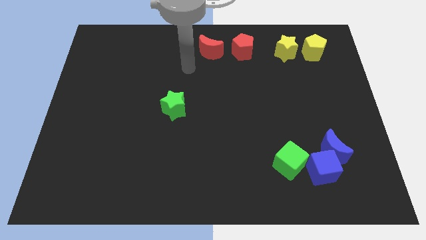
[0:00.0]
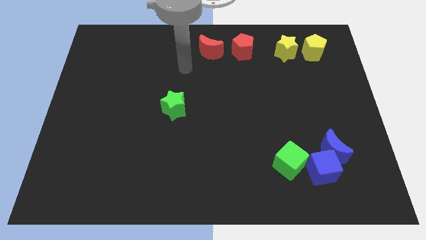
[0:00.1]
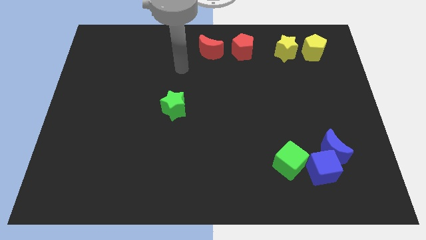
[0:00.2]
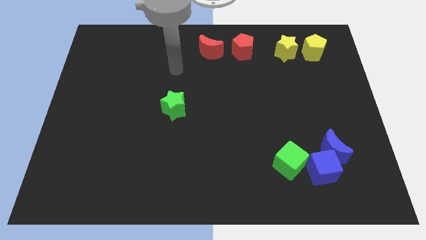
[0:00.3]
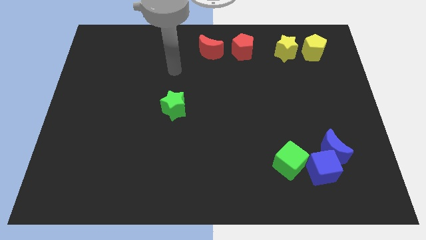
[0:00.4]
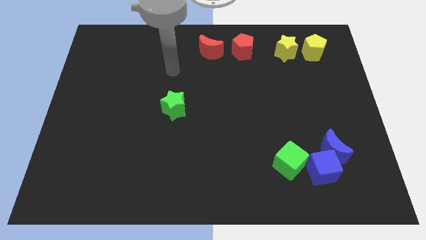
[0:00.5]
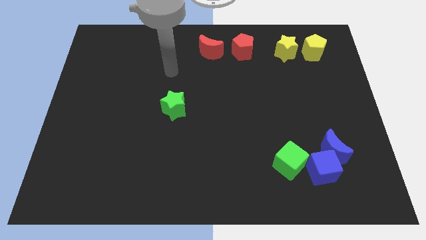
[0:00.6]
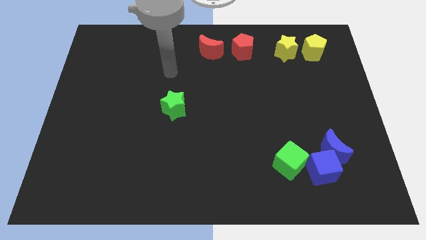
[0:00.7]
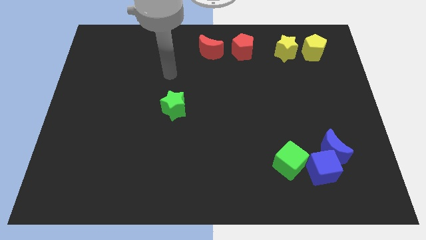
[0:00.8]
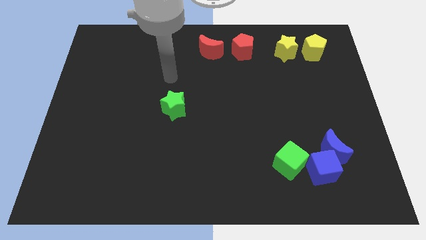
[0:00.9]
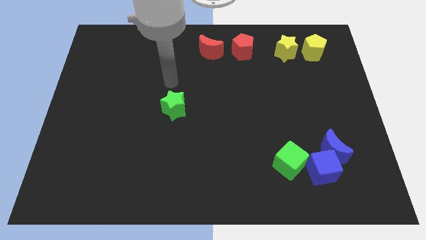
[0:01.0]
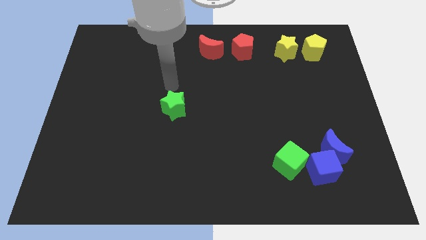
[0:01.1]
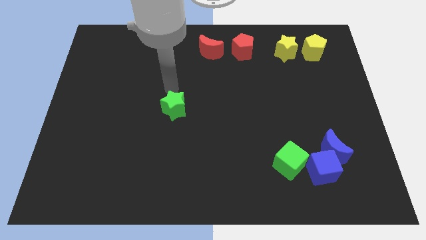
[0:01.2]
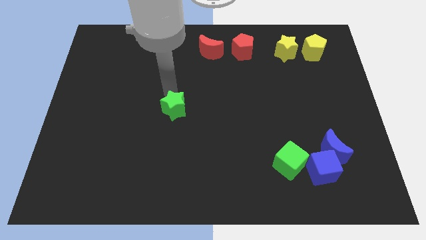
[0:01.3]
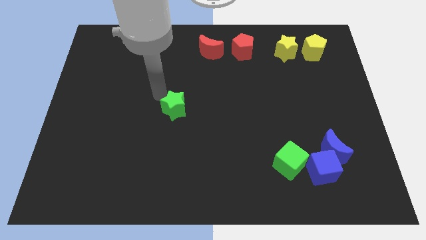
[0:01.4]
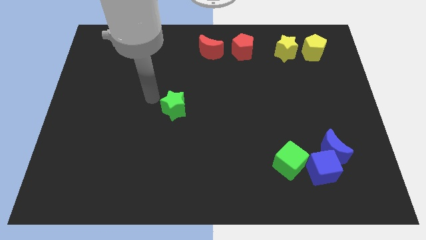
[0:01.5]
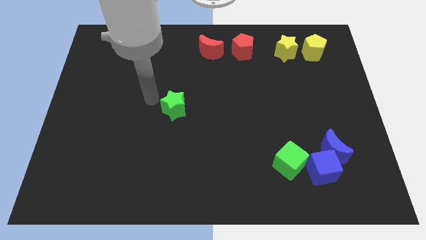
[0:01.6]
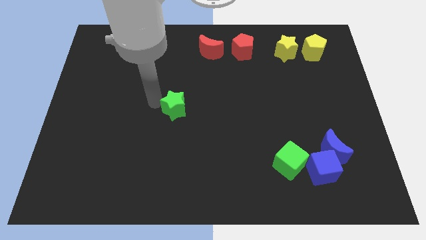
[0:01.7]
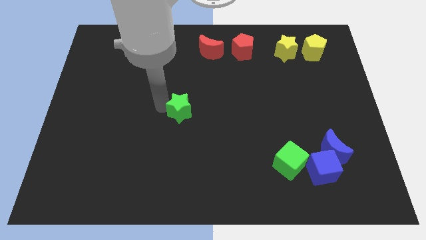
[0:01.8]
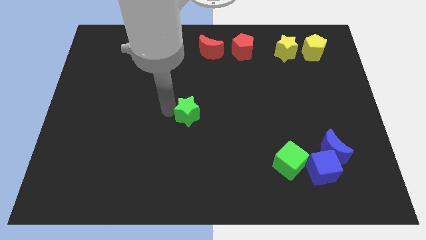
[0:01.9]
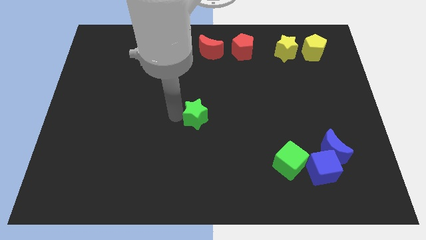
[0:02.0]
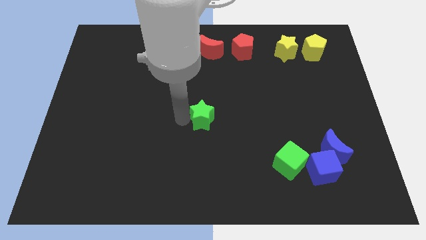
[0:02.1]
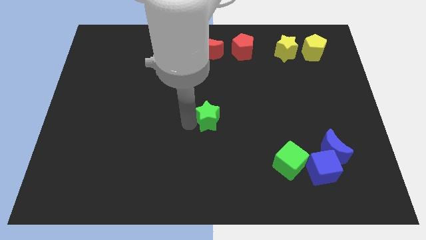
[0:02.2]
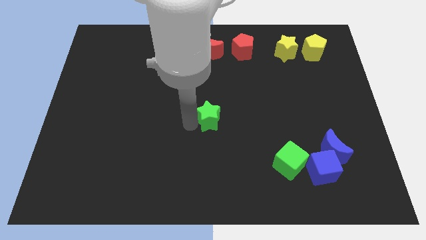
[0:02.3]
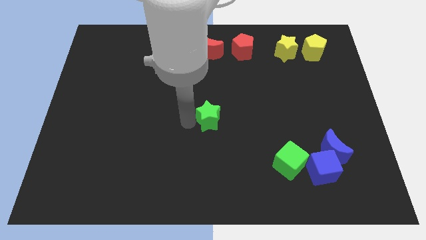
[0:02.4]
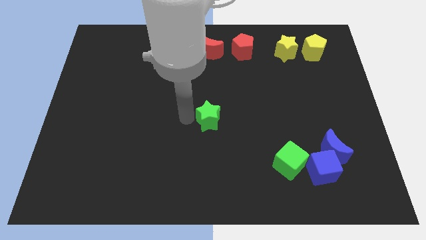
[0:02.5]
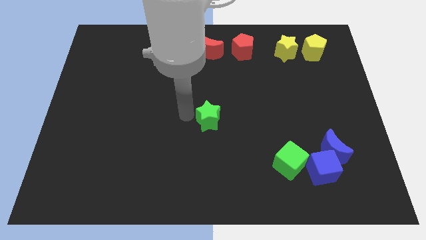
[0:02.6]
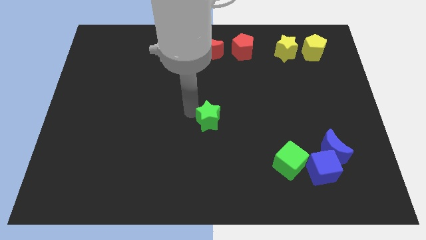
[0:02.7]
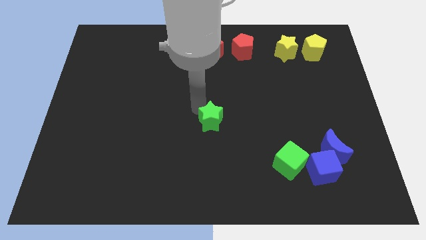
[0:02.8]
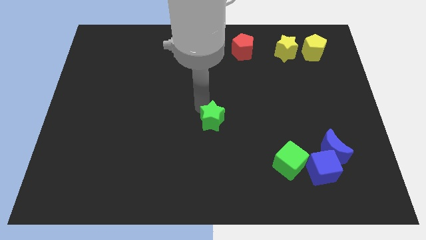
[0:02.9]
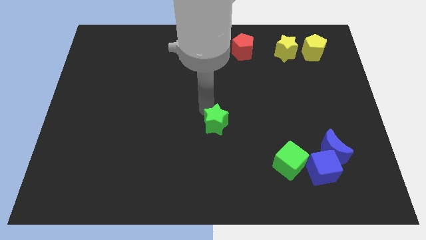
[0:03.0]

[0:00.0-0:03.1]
place green star to the bottom of the red moon

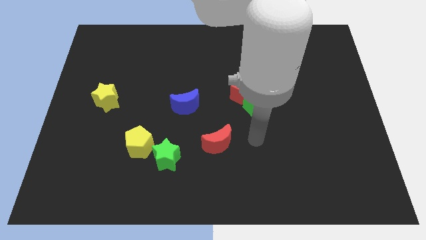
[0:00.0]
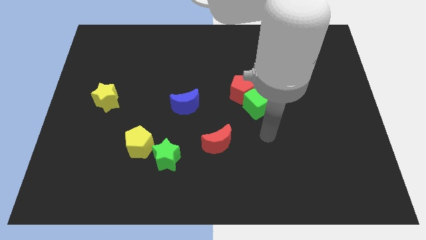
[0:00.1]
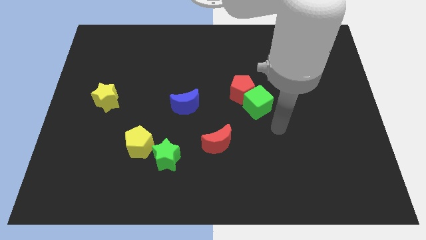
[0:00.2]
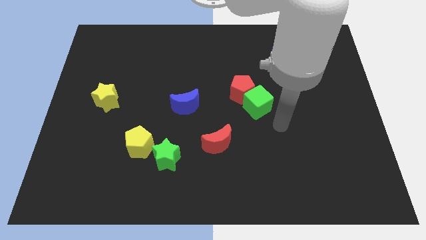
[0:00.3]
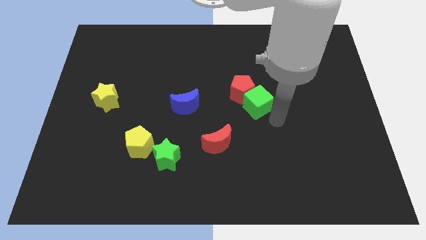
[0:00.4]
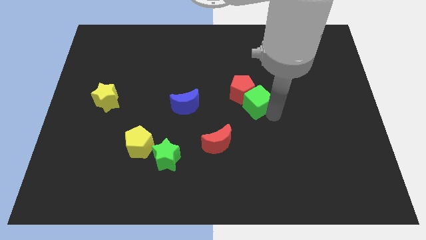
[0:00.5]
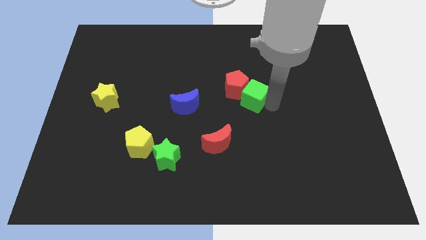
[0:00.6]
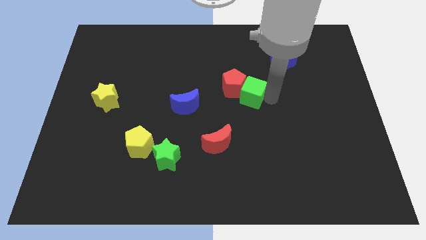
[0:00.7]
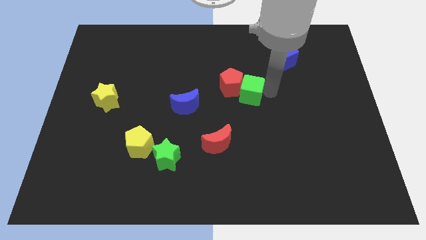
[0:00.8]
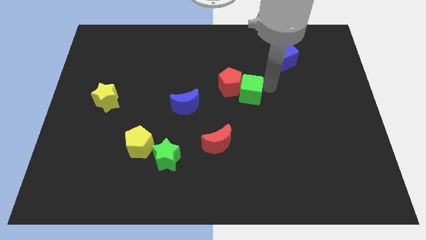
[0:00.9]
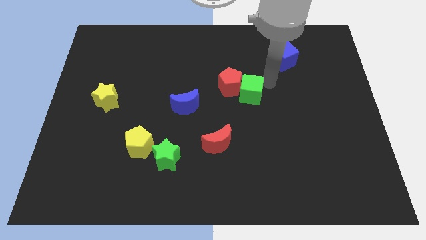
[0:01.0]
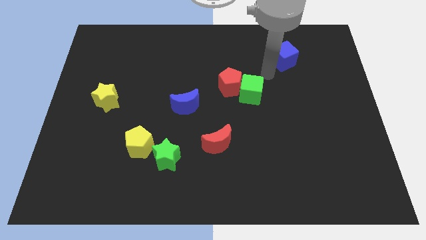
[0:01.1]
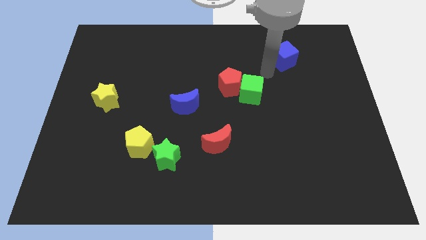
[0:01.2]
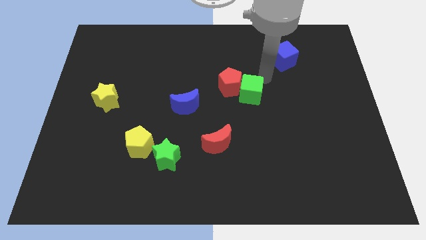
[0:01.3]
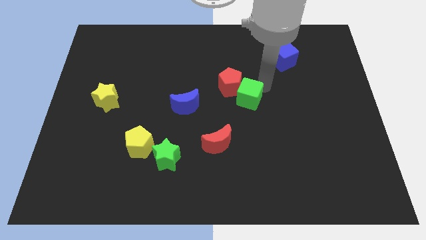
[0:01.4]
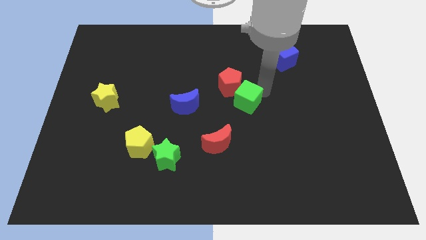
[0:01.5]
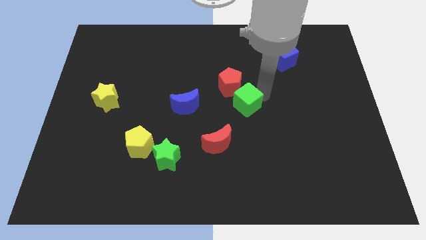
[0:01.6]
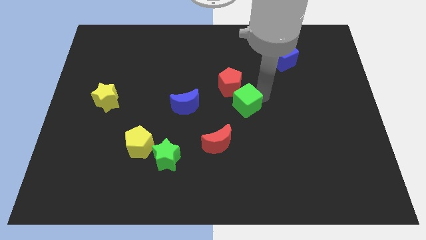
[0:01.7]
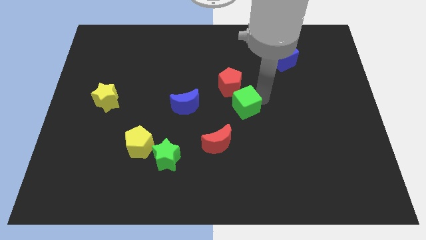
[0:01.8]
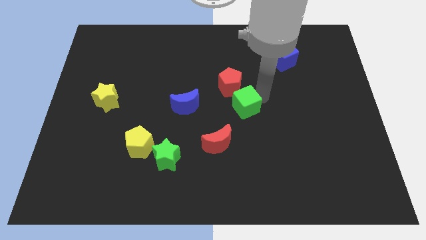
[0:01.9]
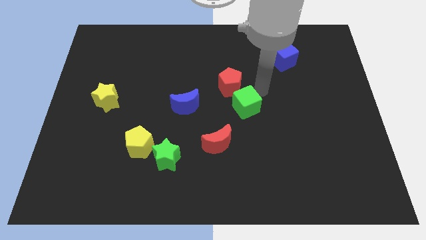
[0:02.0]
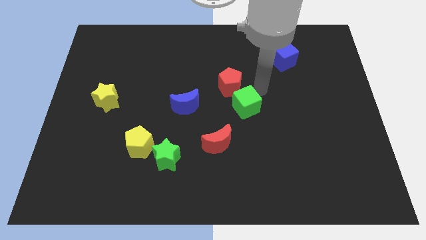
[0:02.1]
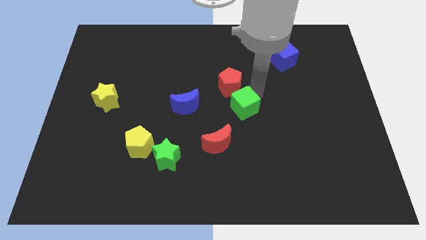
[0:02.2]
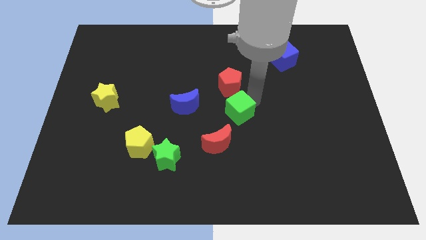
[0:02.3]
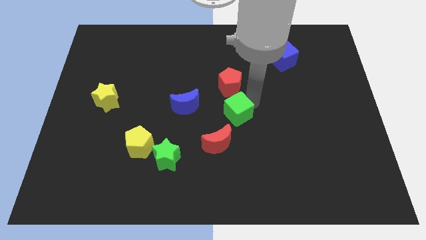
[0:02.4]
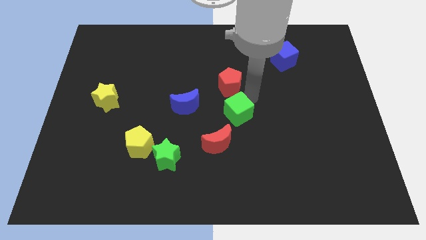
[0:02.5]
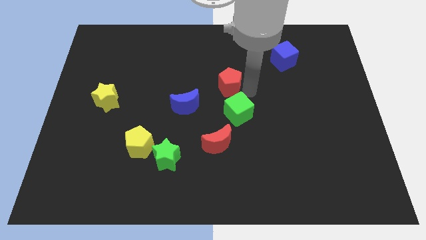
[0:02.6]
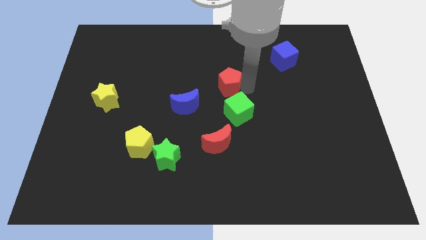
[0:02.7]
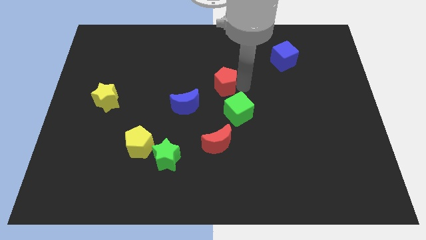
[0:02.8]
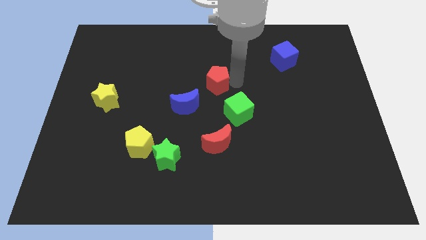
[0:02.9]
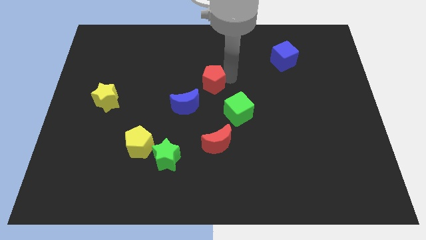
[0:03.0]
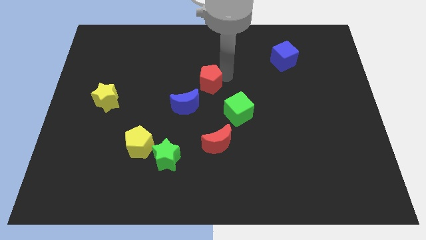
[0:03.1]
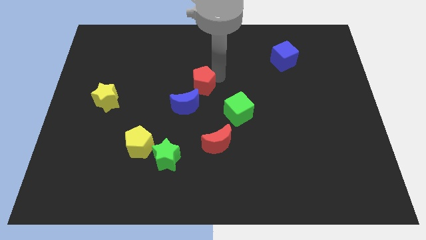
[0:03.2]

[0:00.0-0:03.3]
separate the green cube and red pentagon each others

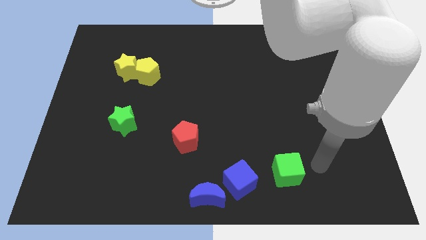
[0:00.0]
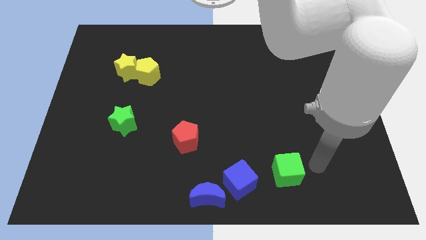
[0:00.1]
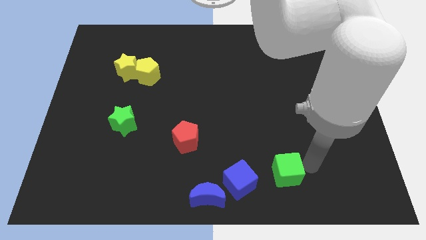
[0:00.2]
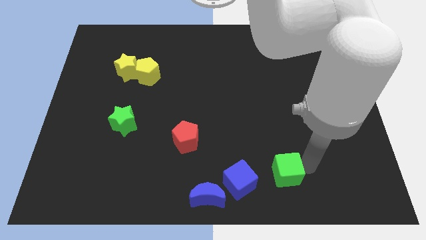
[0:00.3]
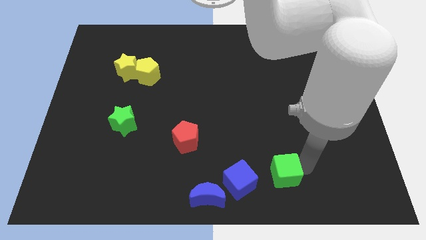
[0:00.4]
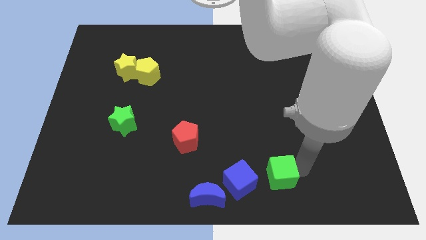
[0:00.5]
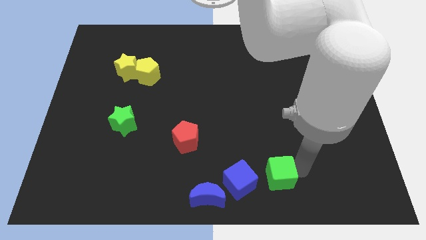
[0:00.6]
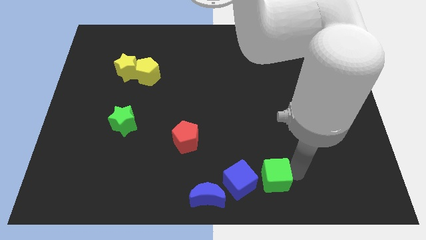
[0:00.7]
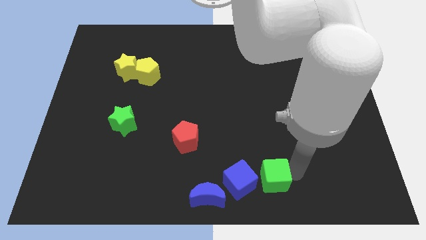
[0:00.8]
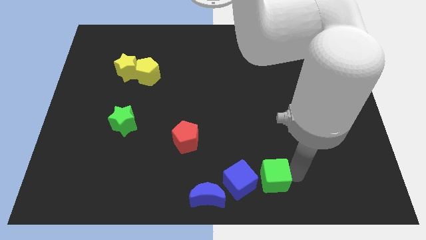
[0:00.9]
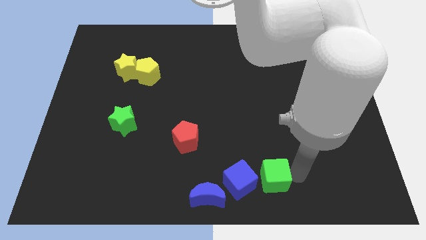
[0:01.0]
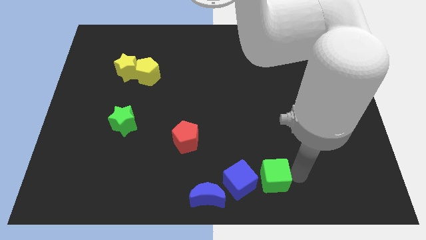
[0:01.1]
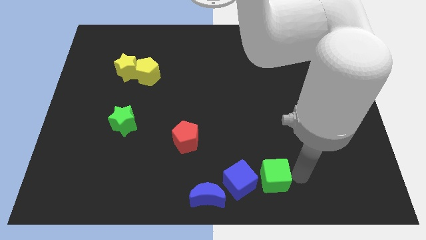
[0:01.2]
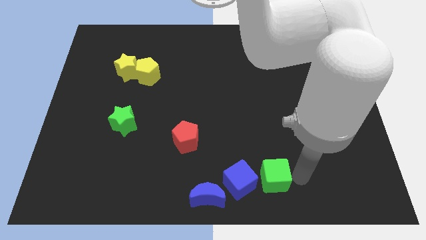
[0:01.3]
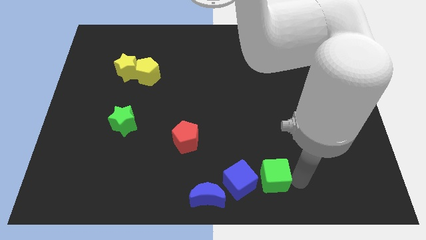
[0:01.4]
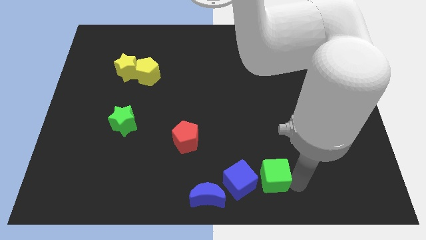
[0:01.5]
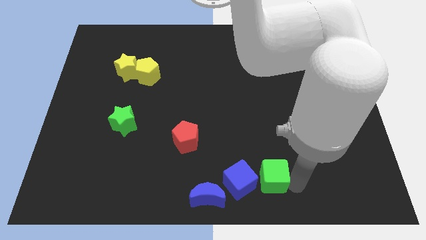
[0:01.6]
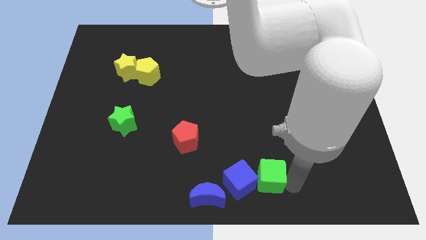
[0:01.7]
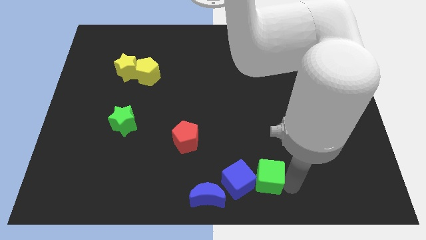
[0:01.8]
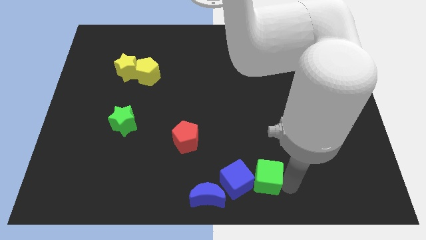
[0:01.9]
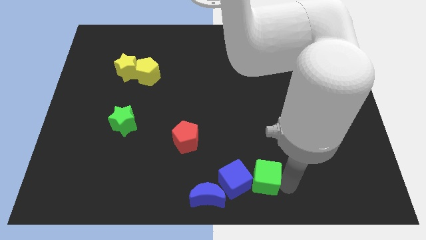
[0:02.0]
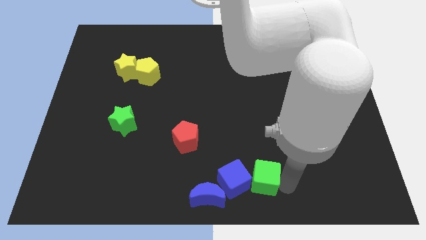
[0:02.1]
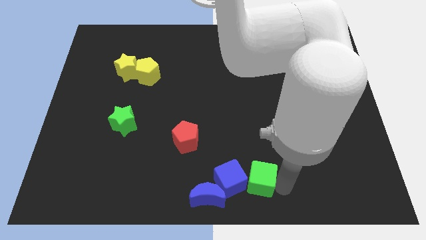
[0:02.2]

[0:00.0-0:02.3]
move the green cube into the blue cube to the bottom center

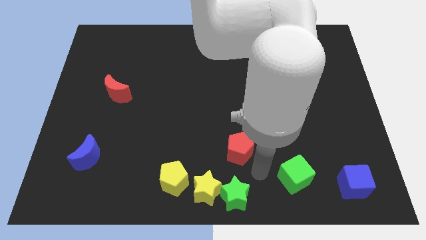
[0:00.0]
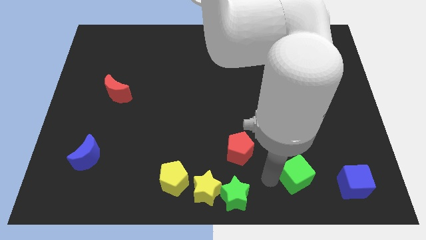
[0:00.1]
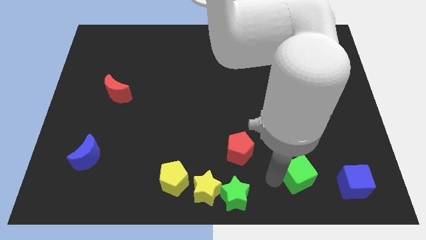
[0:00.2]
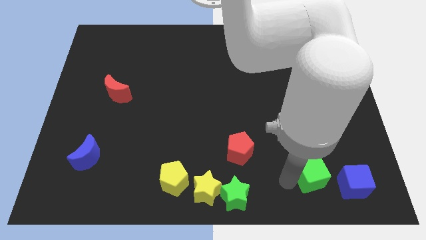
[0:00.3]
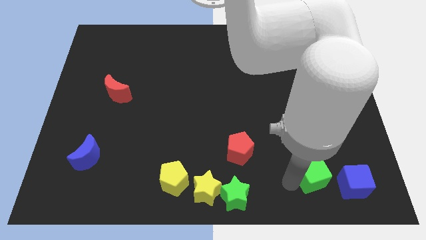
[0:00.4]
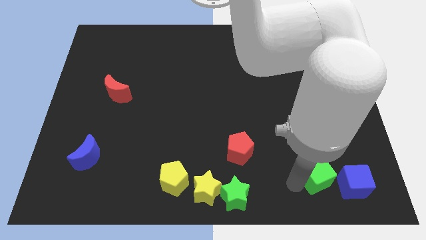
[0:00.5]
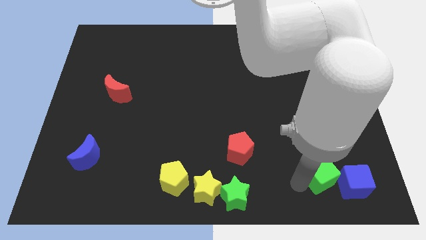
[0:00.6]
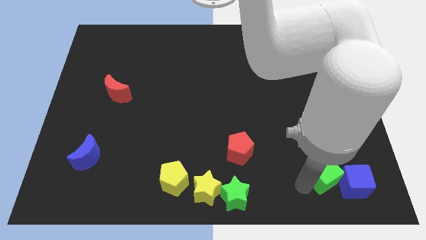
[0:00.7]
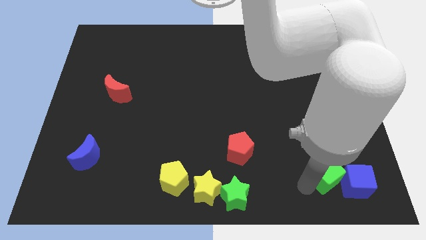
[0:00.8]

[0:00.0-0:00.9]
take the green cube into the blue cube
